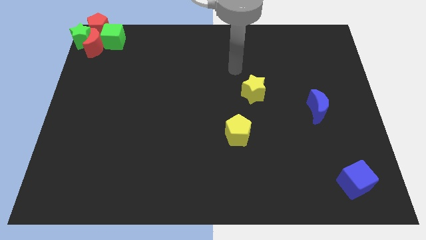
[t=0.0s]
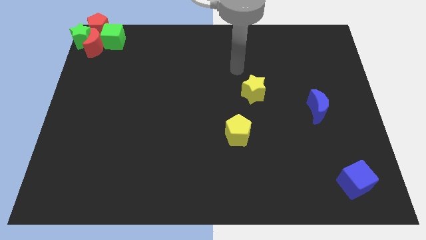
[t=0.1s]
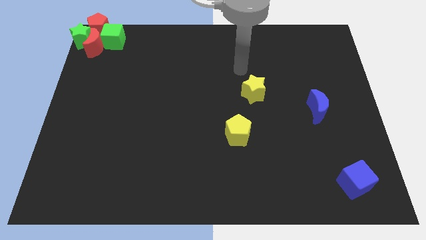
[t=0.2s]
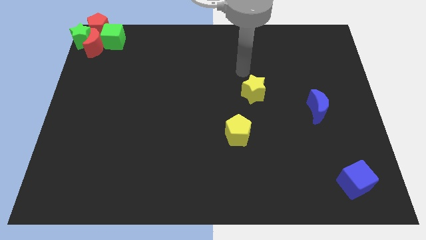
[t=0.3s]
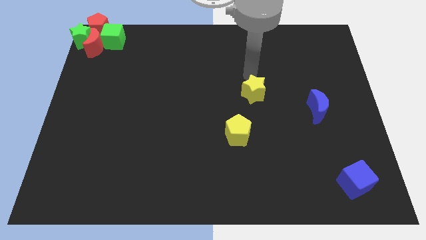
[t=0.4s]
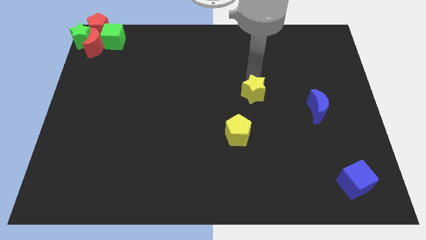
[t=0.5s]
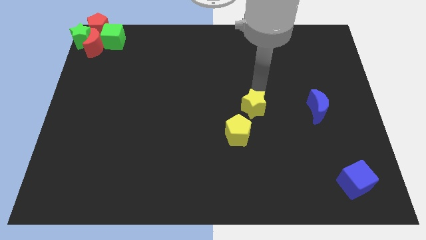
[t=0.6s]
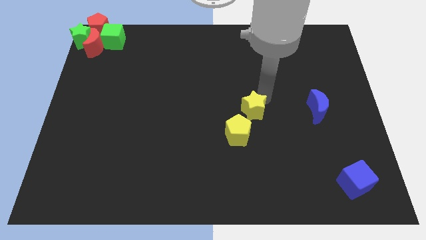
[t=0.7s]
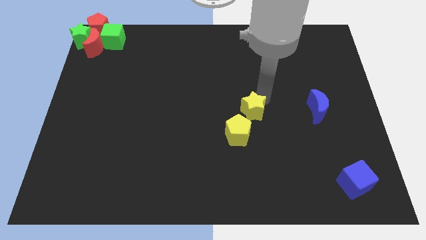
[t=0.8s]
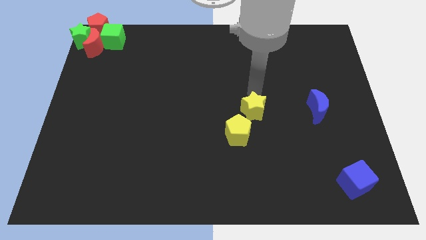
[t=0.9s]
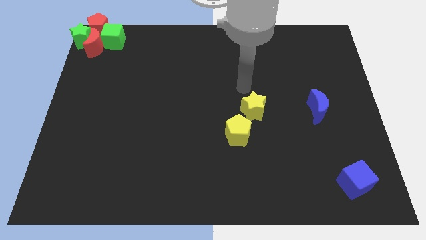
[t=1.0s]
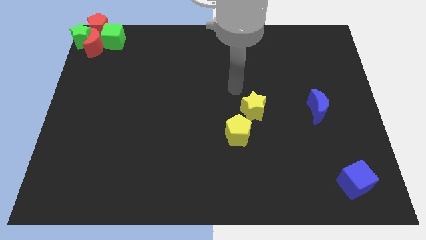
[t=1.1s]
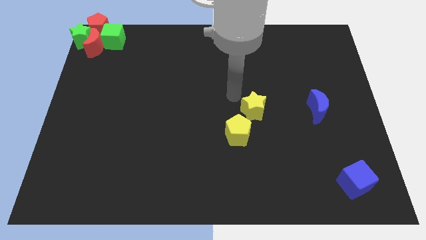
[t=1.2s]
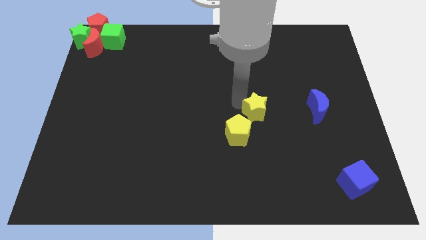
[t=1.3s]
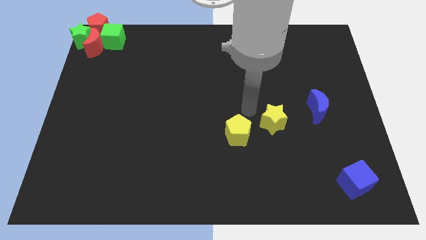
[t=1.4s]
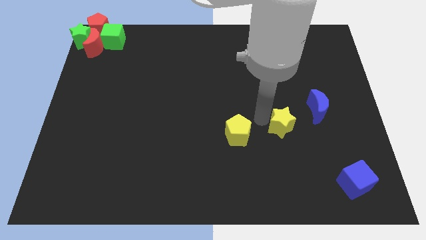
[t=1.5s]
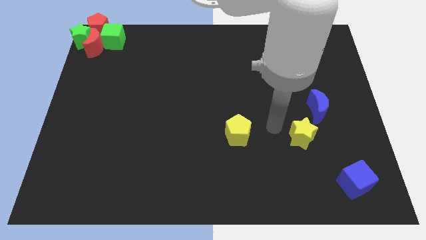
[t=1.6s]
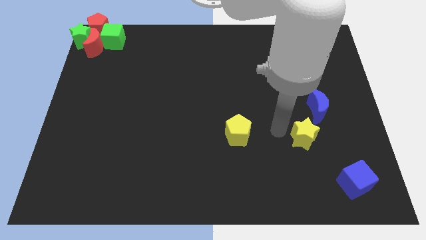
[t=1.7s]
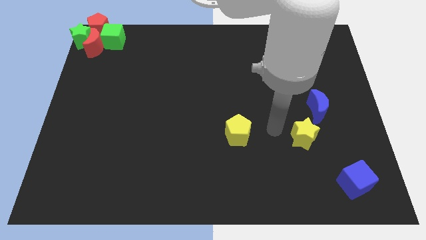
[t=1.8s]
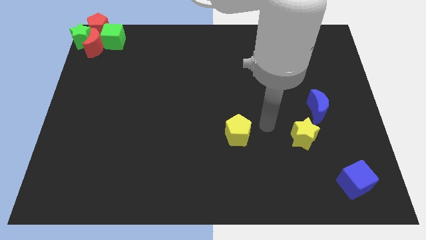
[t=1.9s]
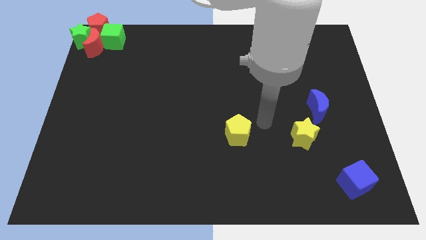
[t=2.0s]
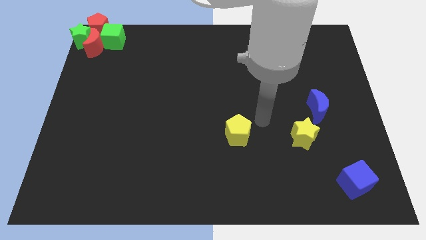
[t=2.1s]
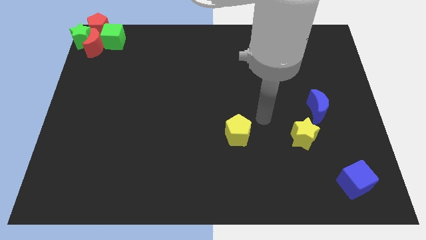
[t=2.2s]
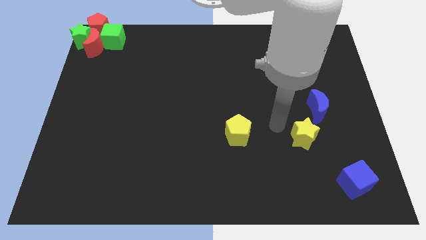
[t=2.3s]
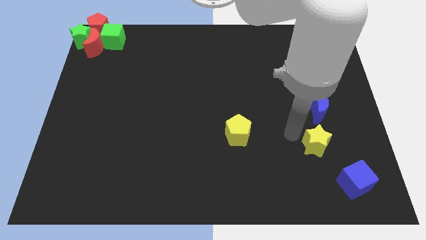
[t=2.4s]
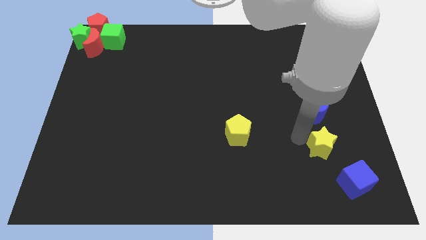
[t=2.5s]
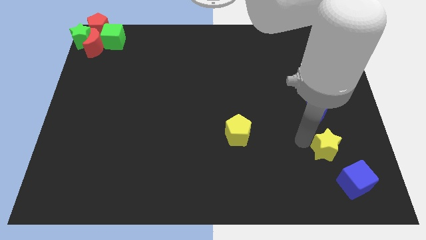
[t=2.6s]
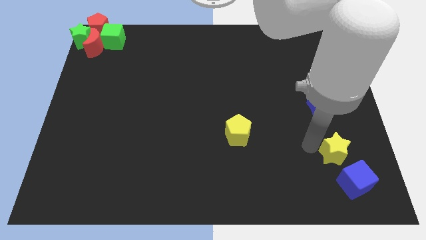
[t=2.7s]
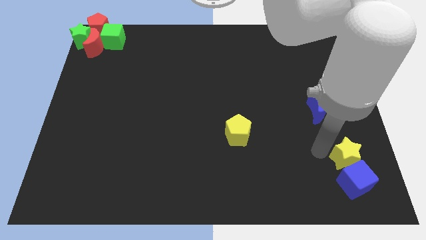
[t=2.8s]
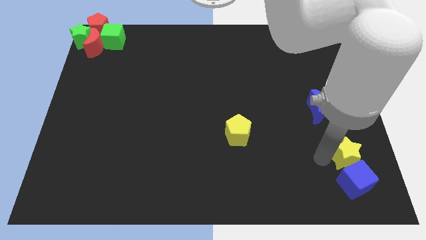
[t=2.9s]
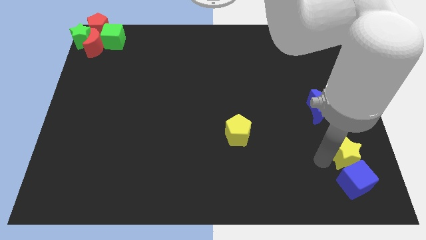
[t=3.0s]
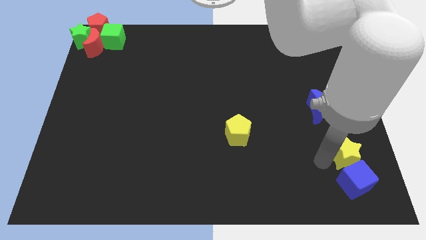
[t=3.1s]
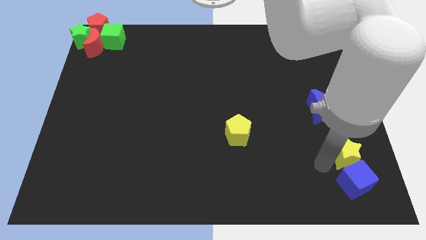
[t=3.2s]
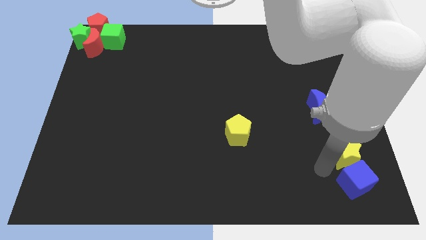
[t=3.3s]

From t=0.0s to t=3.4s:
move the yellow star towards the blue cube

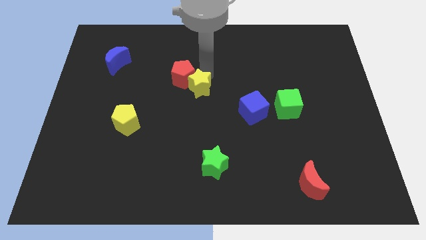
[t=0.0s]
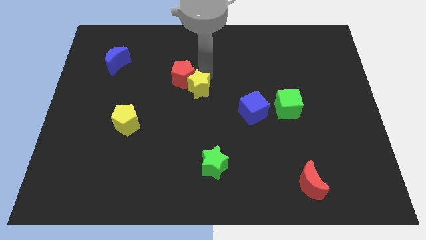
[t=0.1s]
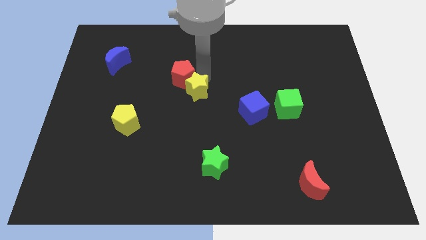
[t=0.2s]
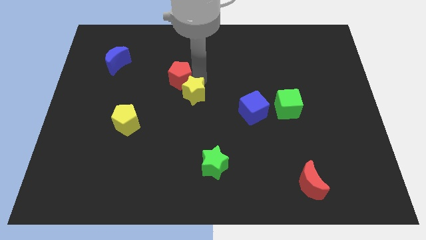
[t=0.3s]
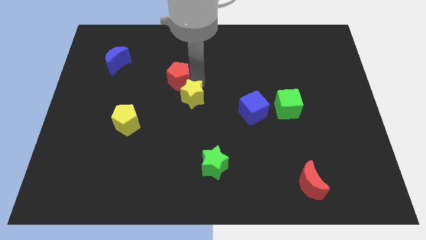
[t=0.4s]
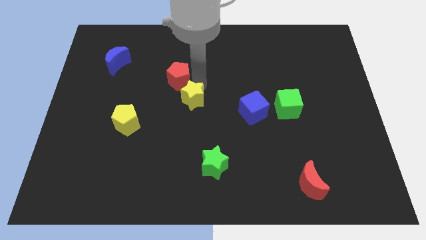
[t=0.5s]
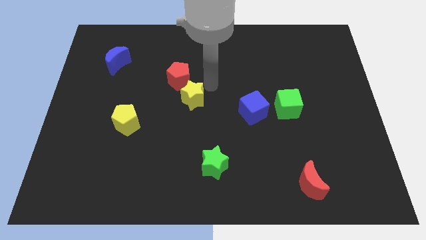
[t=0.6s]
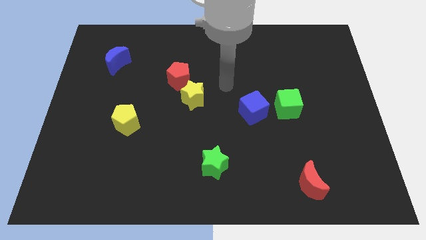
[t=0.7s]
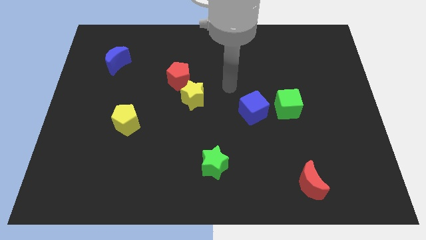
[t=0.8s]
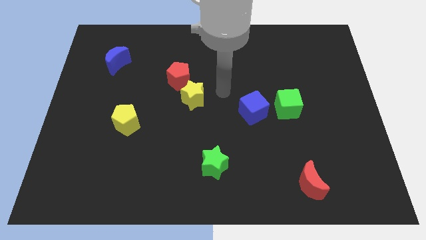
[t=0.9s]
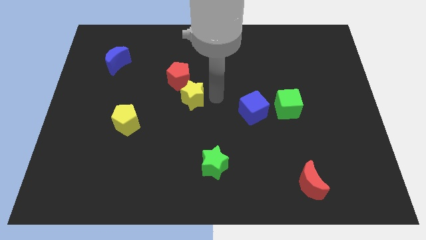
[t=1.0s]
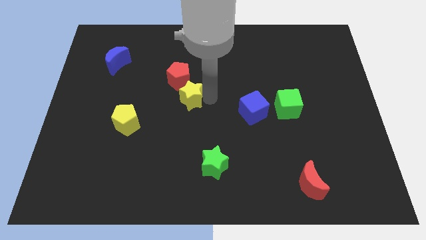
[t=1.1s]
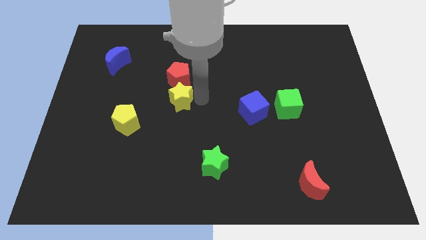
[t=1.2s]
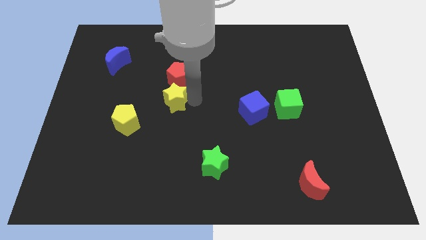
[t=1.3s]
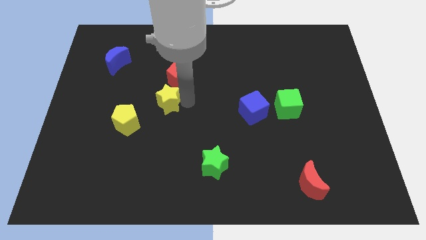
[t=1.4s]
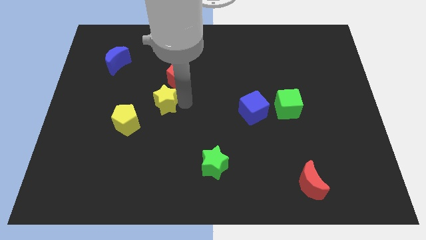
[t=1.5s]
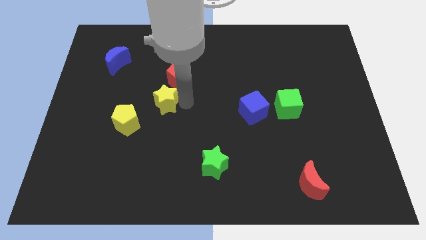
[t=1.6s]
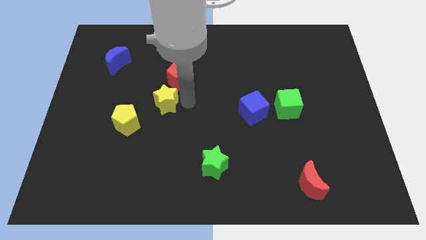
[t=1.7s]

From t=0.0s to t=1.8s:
separate yellow star from the red pentagon

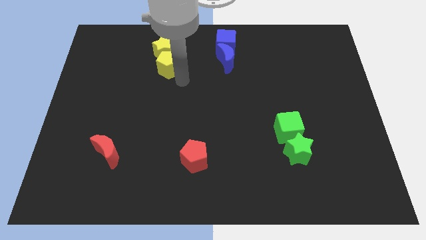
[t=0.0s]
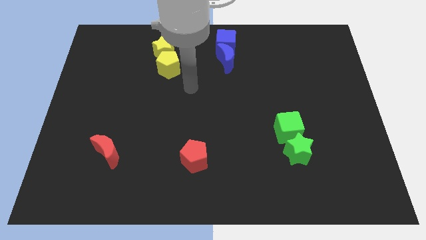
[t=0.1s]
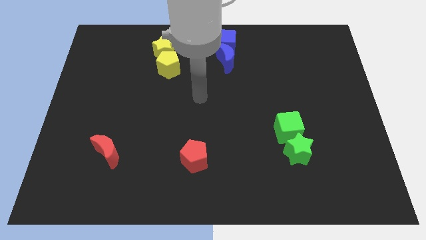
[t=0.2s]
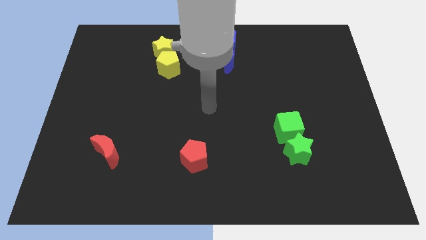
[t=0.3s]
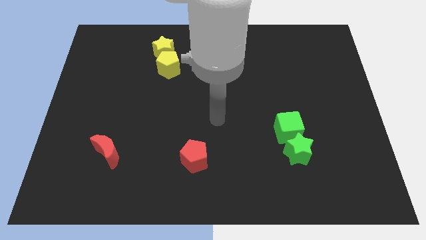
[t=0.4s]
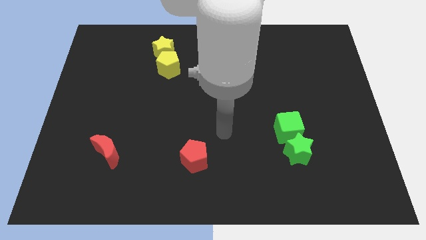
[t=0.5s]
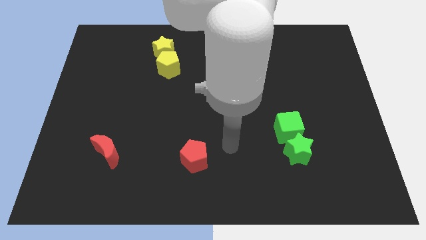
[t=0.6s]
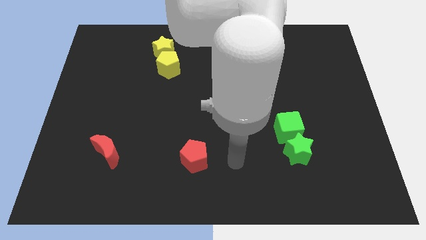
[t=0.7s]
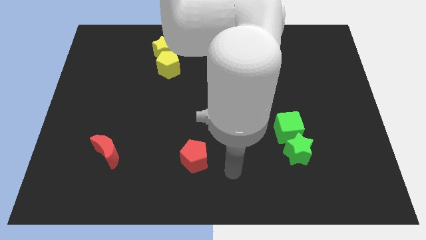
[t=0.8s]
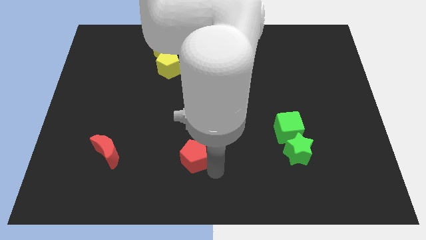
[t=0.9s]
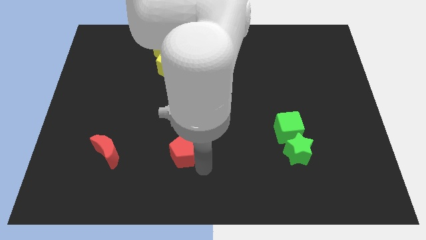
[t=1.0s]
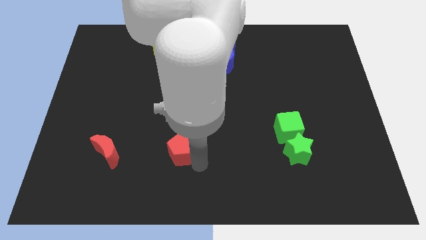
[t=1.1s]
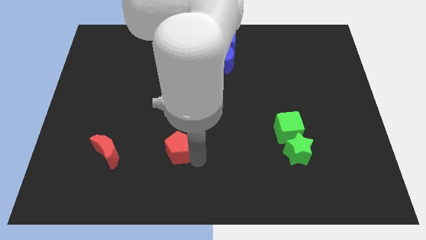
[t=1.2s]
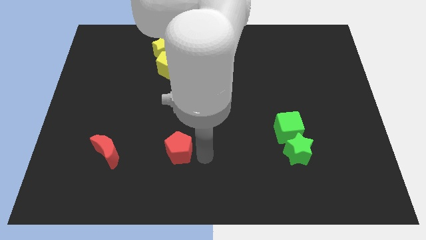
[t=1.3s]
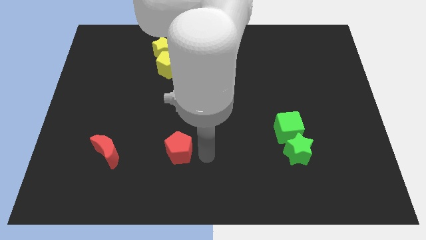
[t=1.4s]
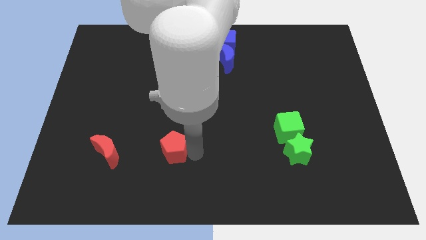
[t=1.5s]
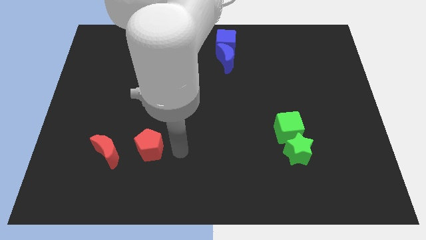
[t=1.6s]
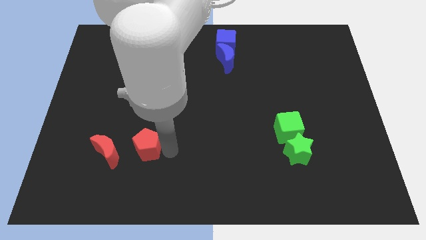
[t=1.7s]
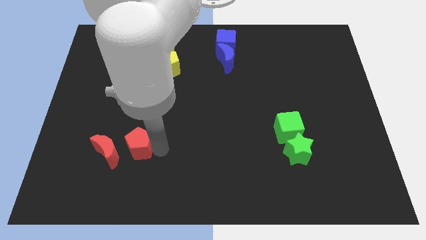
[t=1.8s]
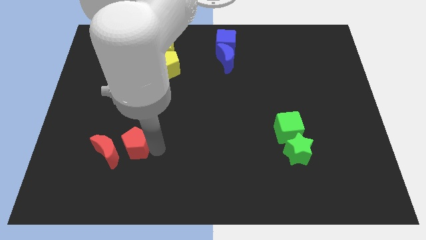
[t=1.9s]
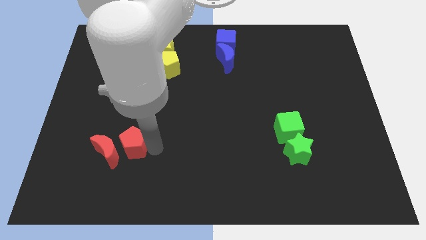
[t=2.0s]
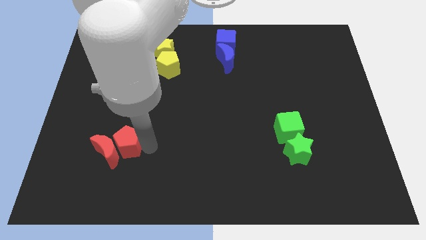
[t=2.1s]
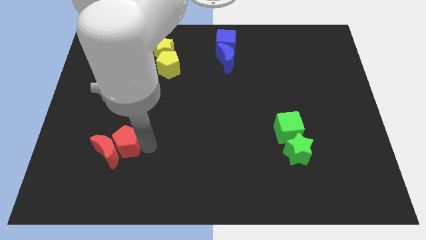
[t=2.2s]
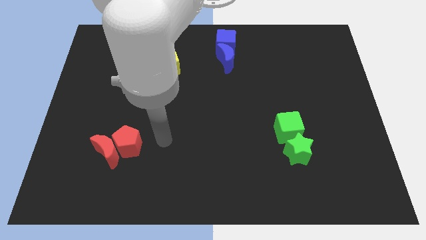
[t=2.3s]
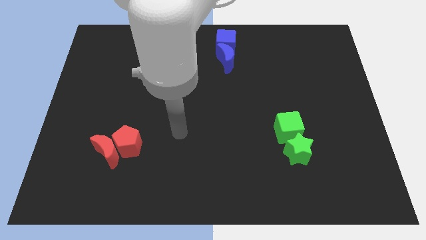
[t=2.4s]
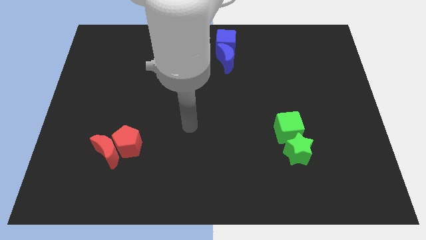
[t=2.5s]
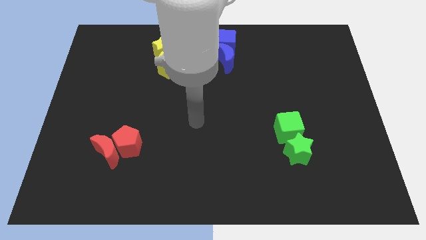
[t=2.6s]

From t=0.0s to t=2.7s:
slide the red pentagon close to the red crescent

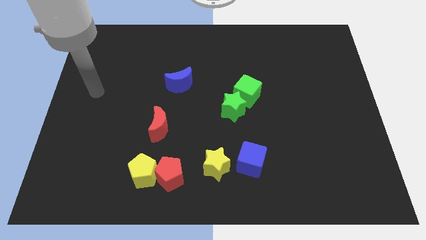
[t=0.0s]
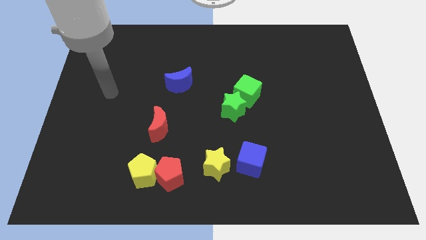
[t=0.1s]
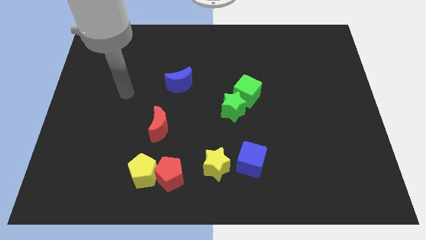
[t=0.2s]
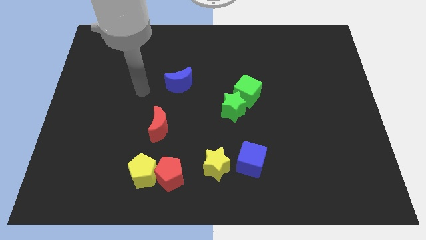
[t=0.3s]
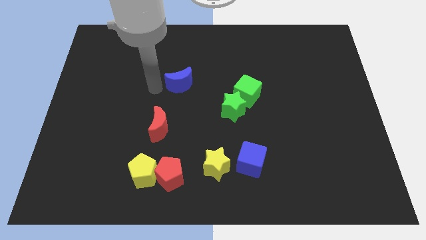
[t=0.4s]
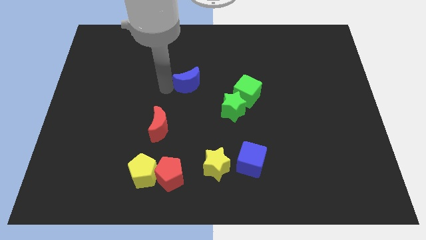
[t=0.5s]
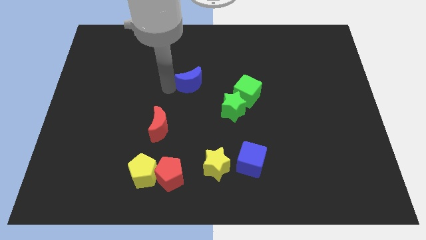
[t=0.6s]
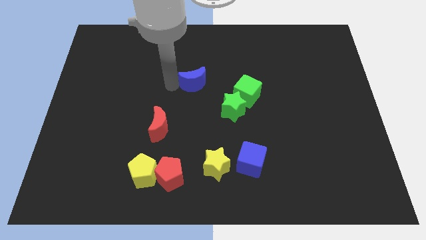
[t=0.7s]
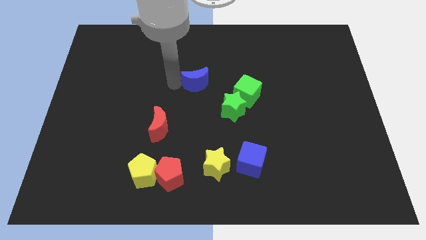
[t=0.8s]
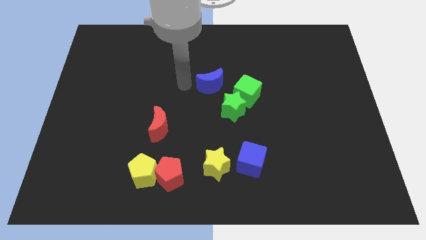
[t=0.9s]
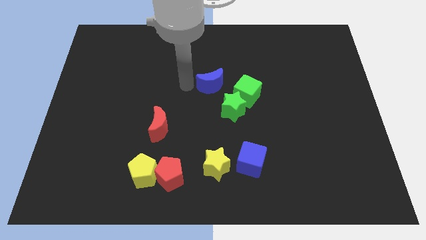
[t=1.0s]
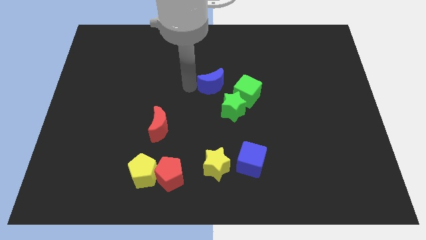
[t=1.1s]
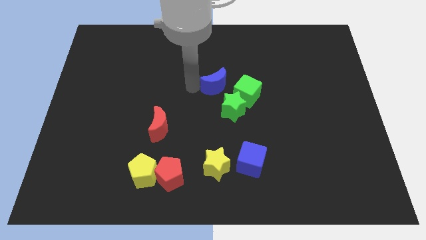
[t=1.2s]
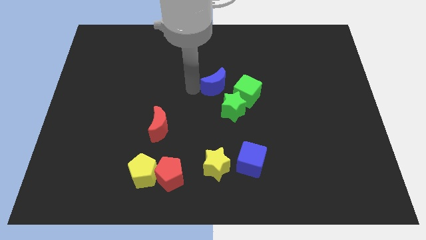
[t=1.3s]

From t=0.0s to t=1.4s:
push blue moon towards green cube
